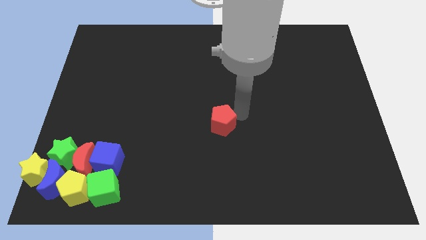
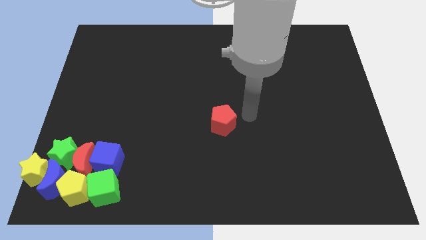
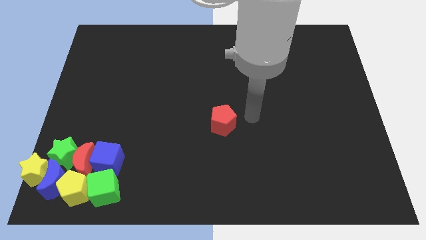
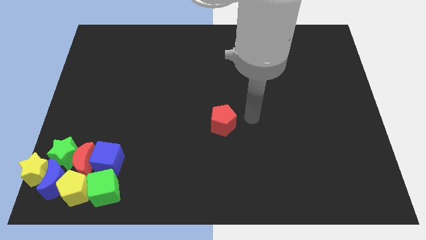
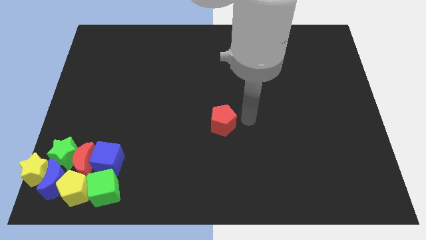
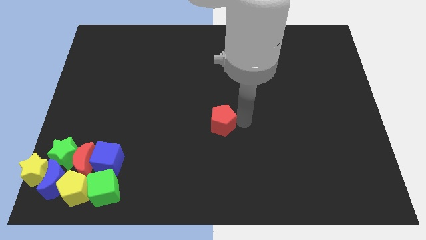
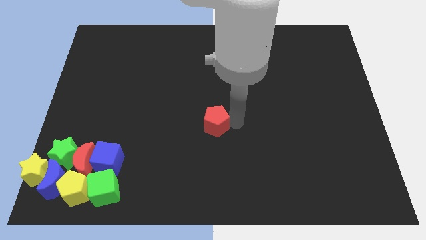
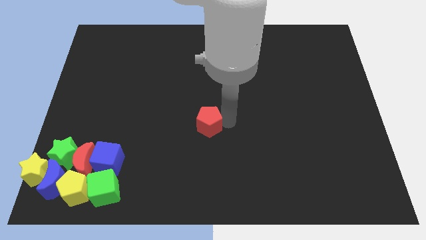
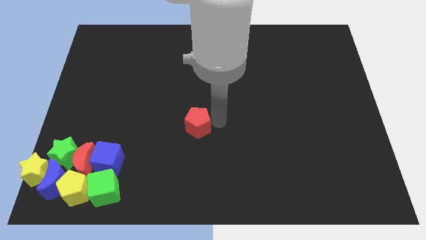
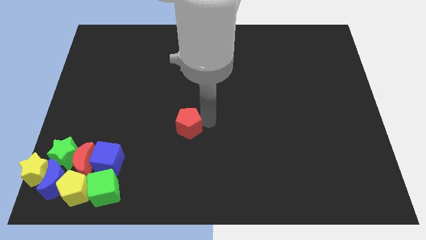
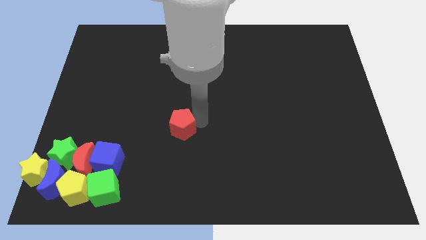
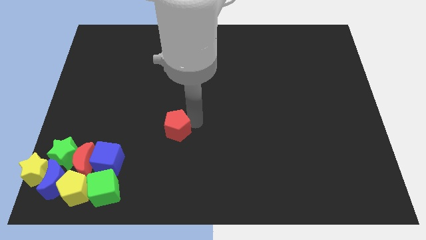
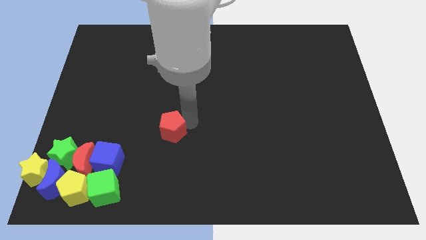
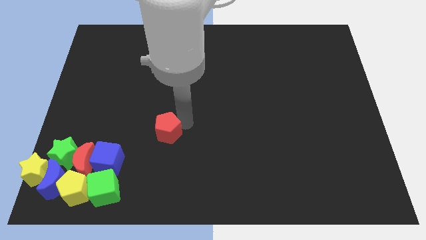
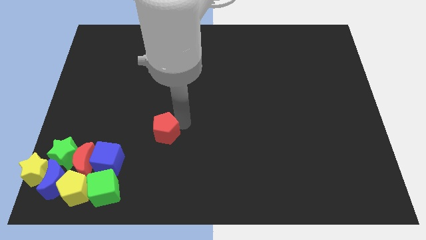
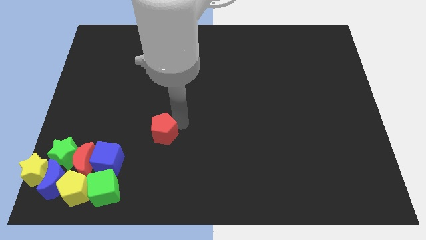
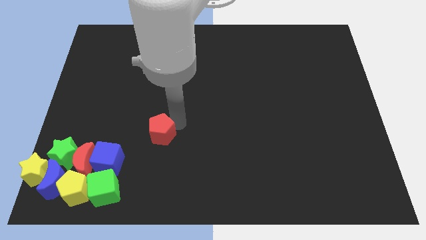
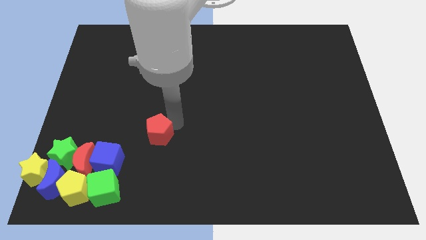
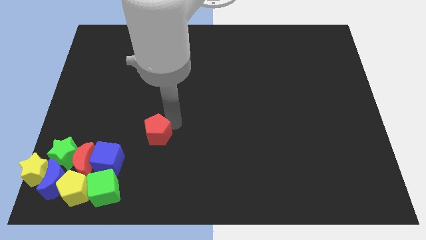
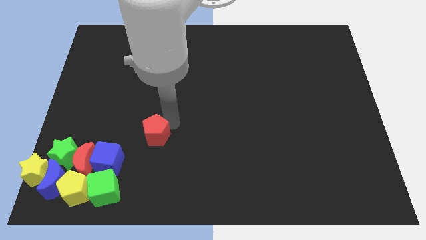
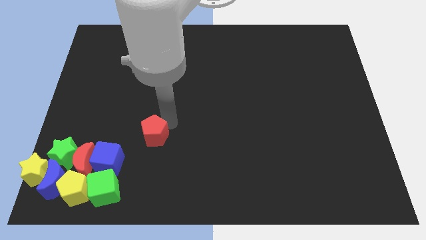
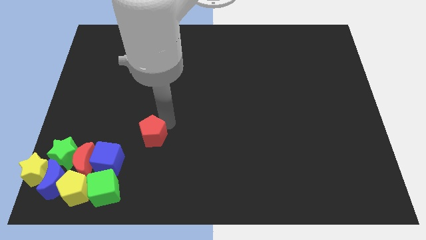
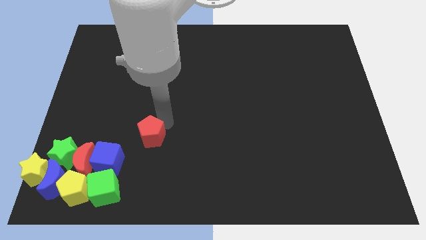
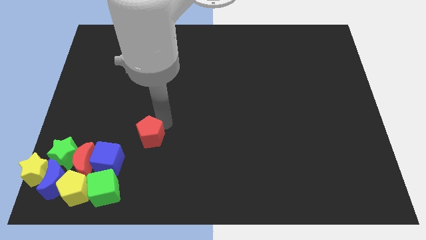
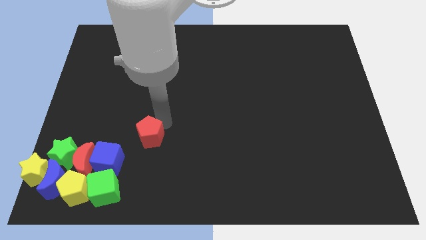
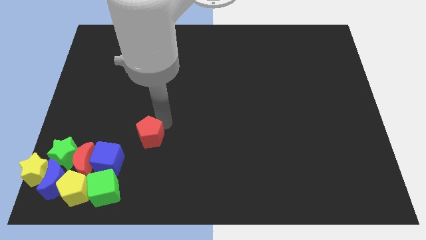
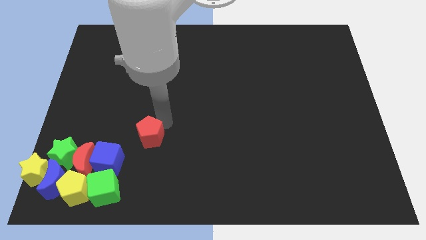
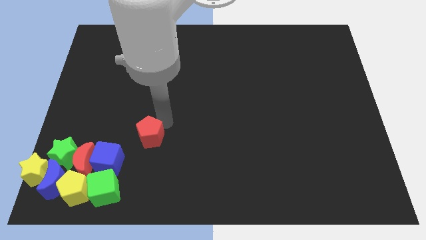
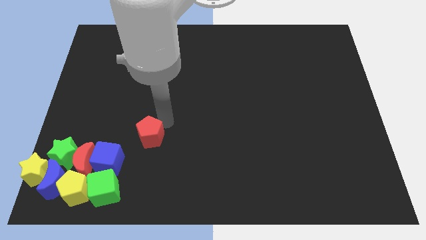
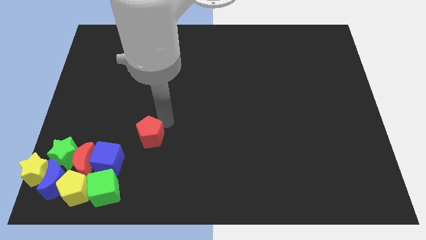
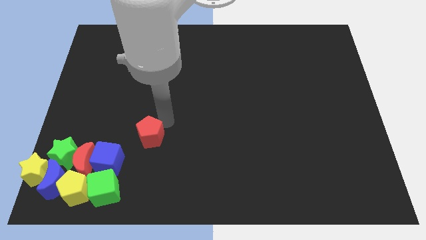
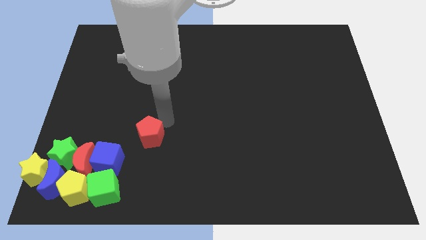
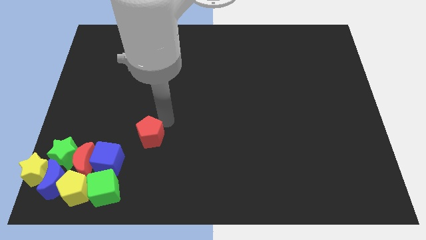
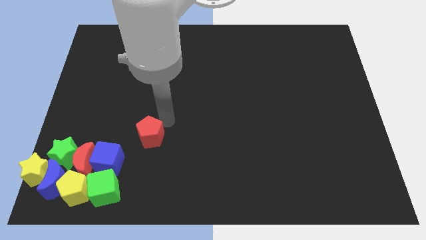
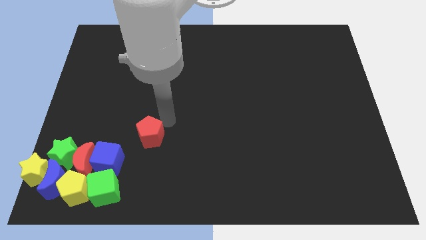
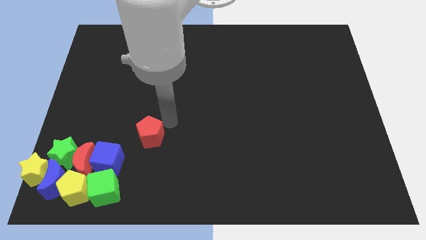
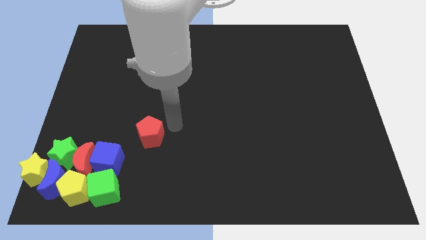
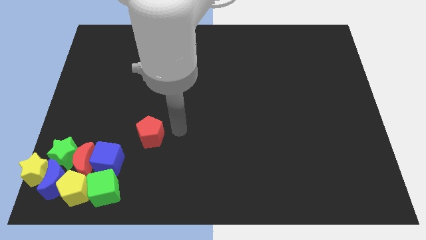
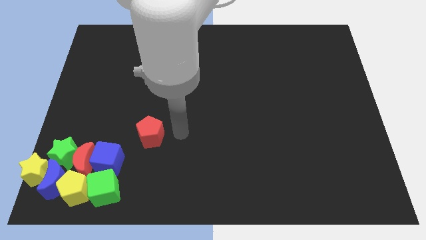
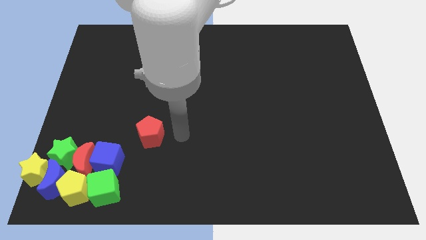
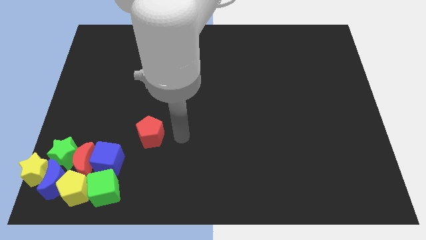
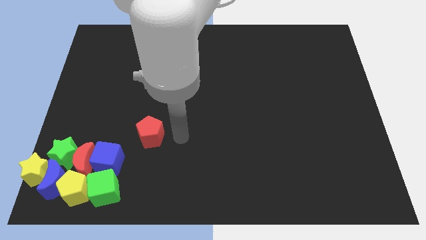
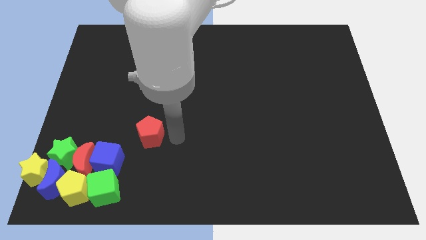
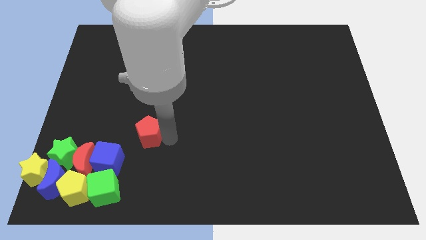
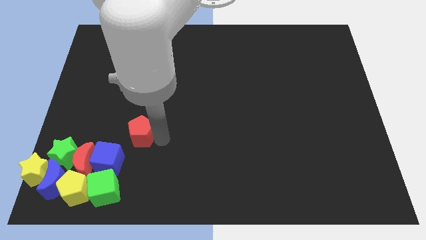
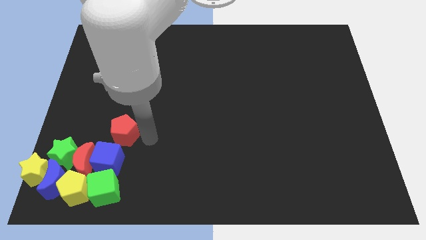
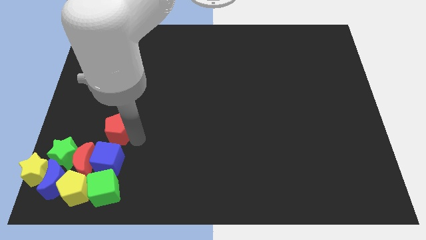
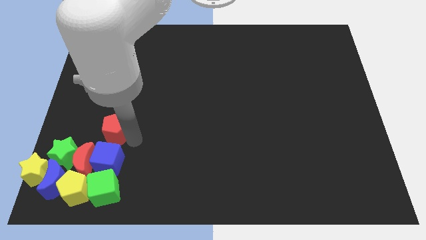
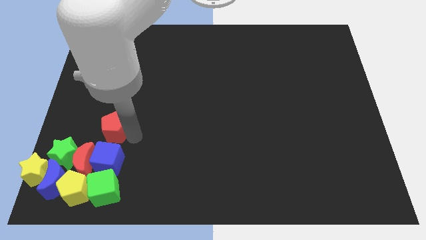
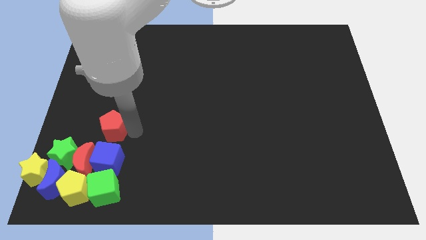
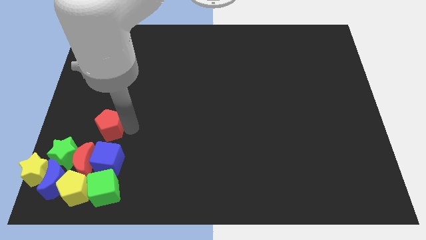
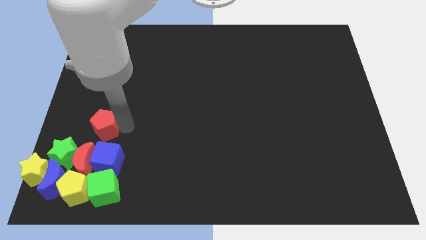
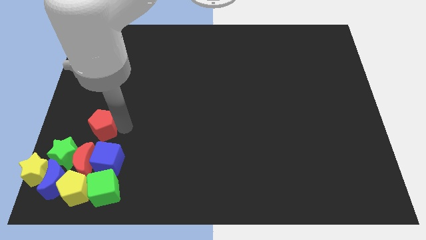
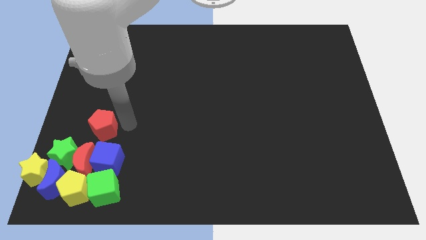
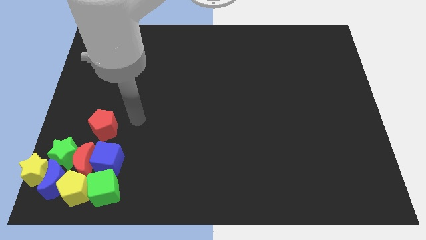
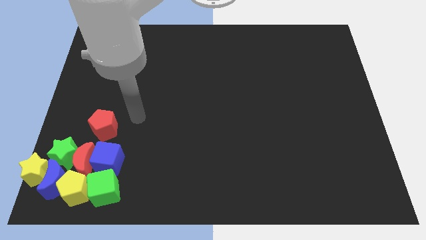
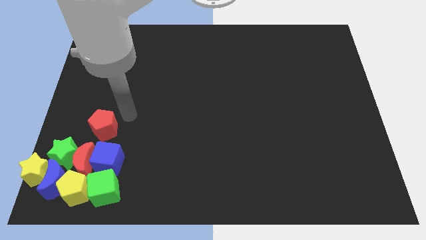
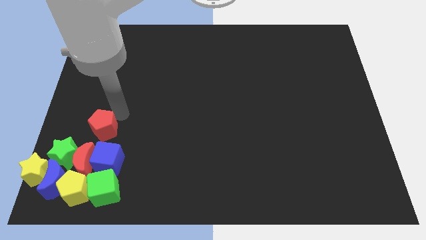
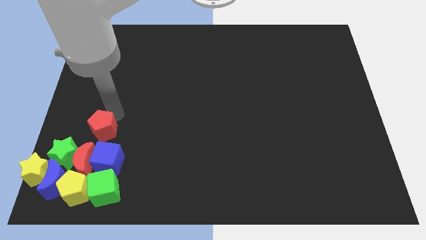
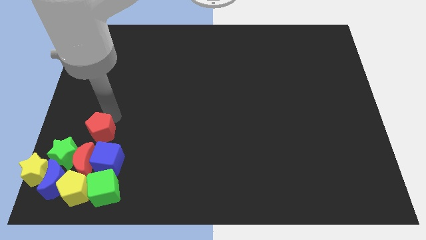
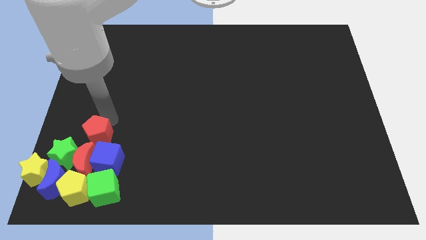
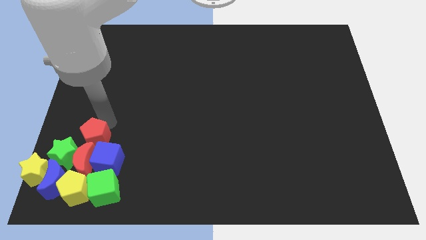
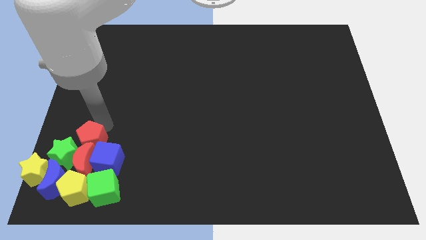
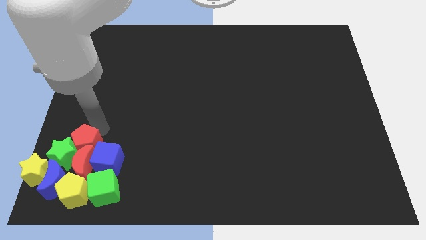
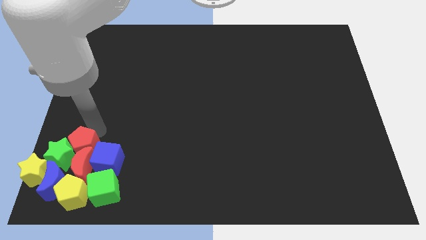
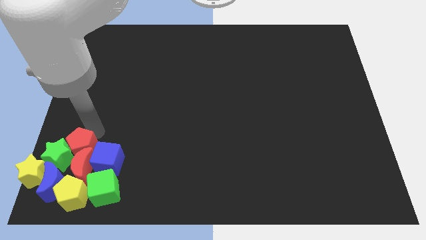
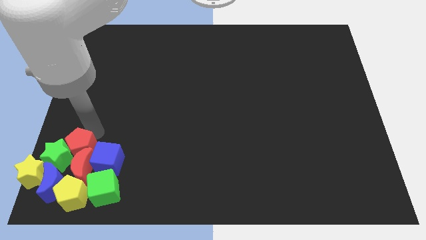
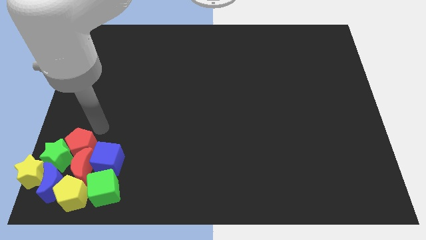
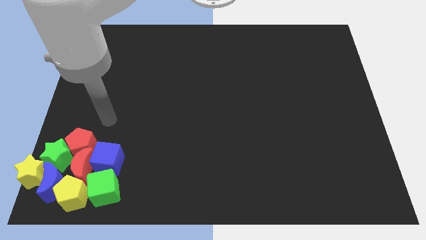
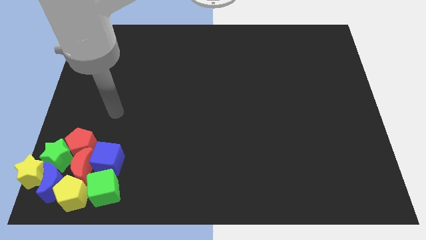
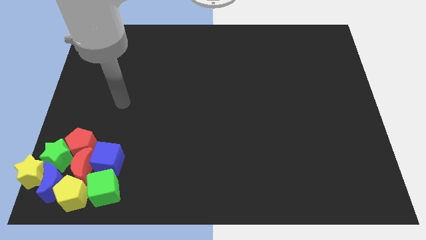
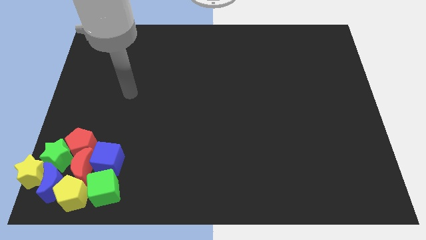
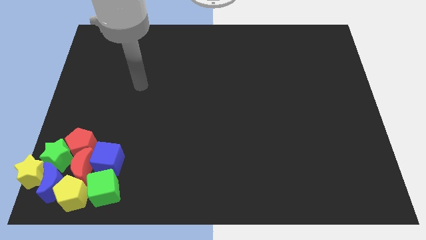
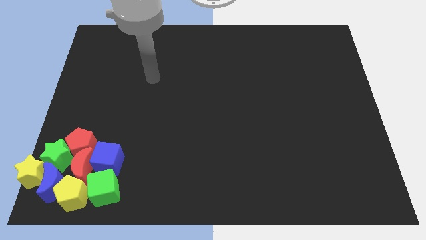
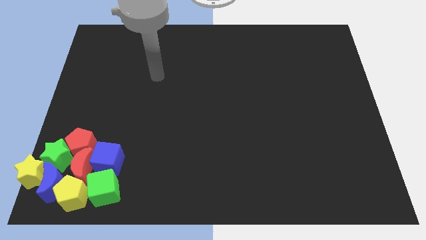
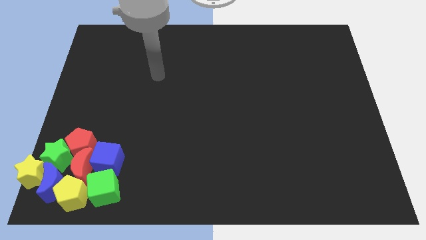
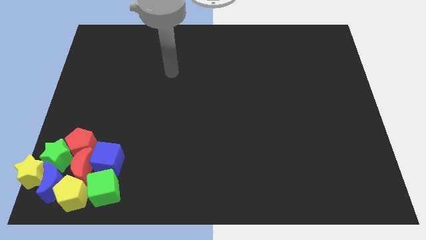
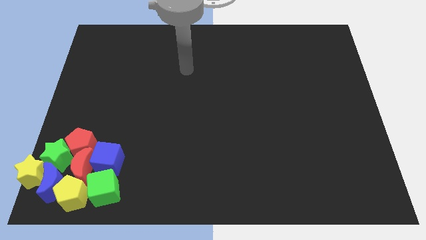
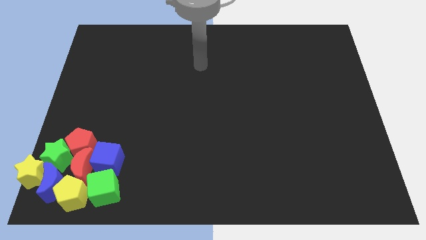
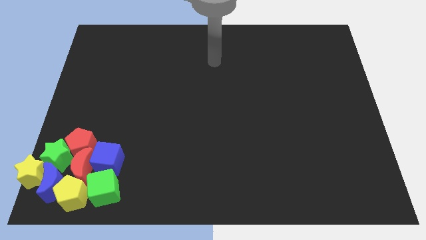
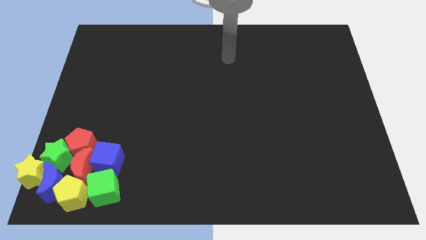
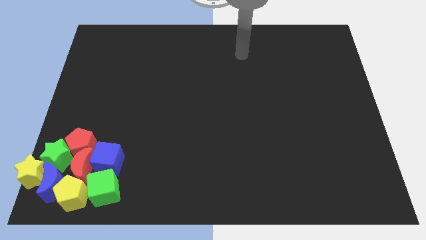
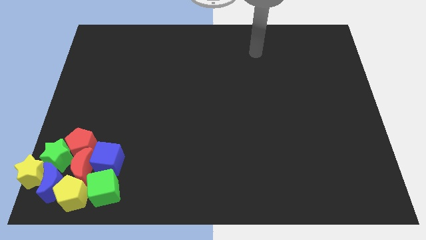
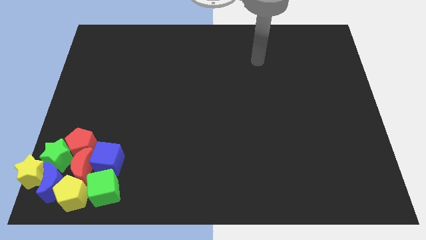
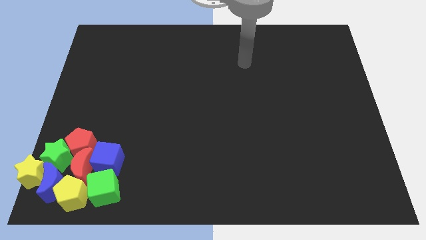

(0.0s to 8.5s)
move the blocks to the left bottom

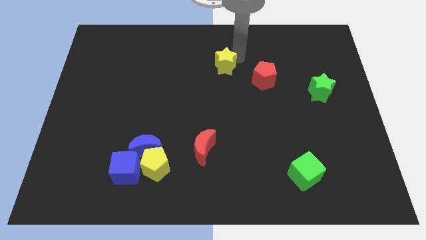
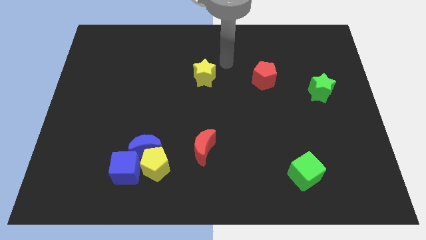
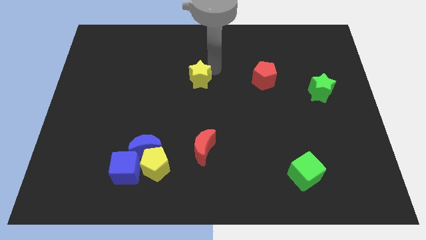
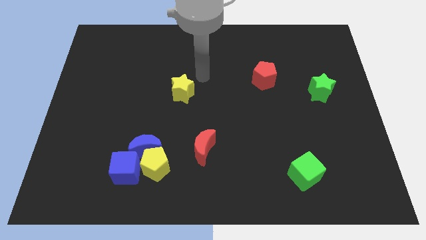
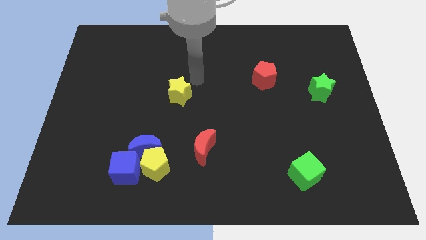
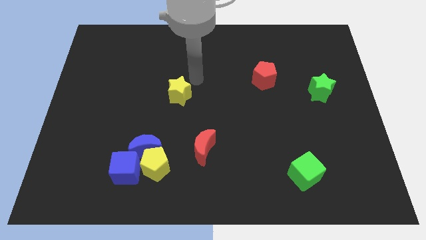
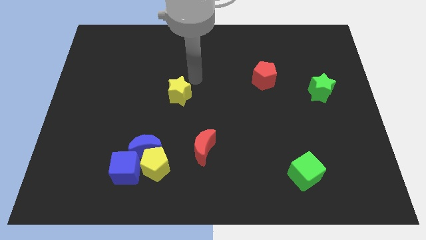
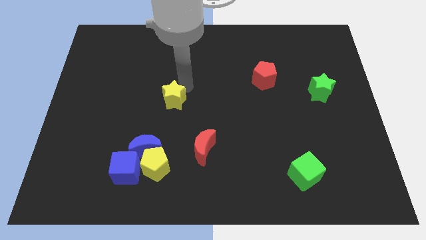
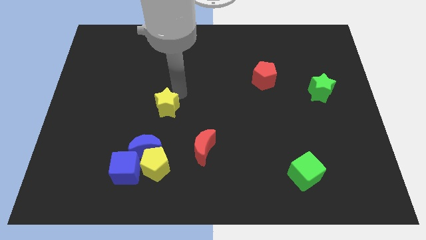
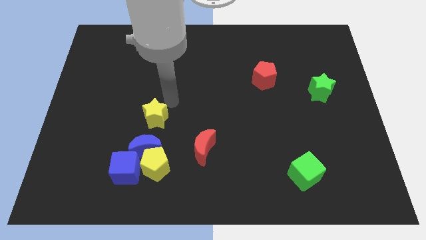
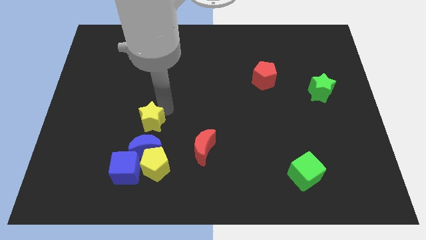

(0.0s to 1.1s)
put yellow star on top of blue moon
